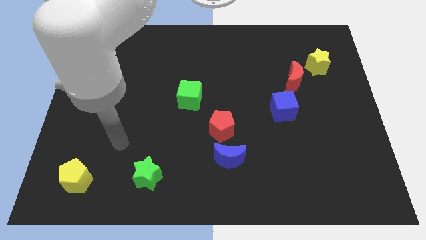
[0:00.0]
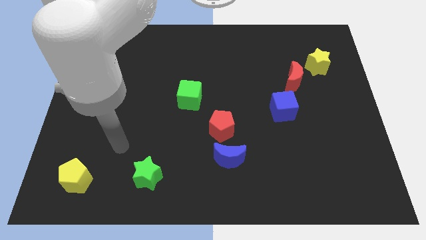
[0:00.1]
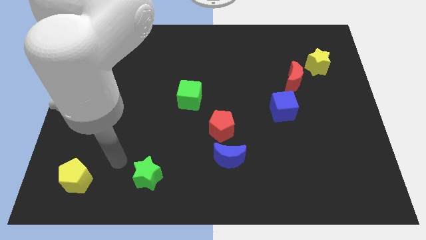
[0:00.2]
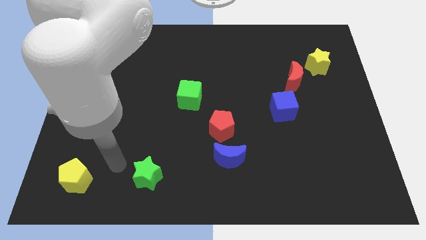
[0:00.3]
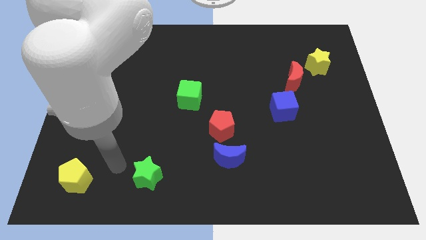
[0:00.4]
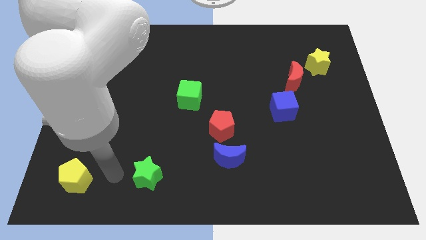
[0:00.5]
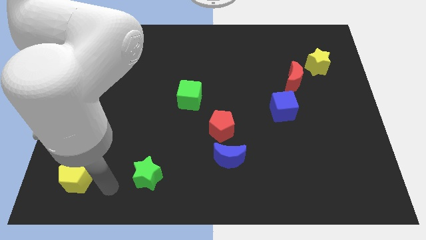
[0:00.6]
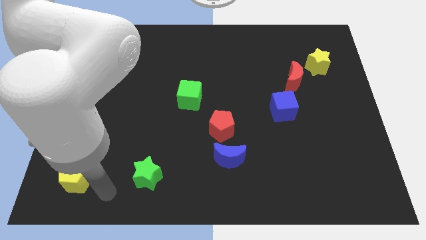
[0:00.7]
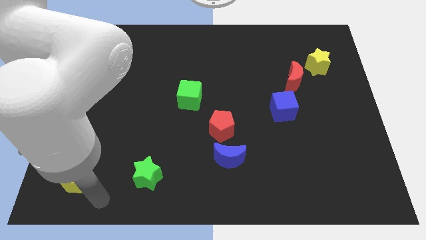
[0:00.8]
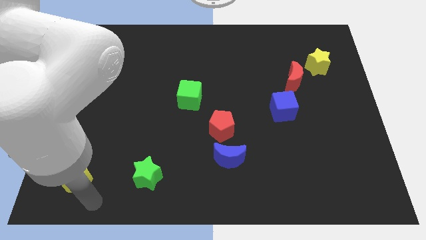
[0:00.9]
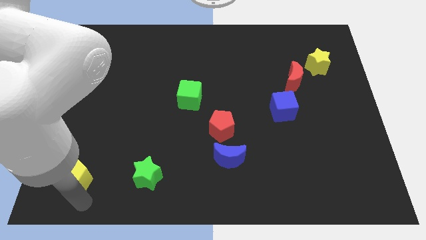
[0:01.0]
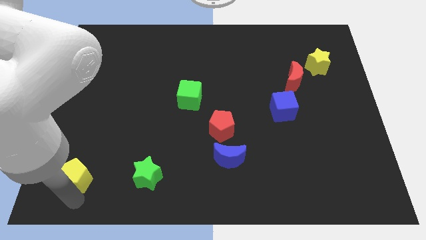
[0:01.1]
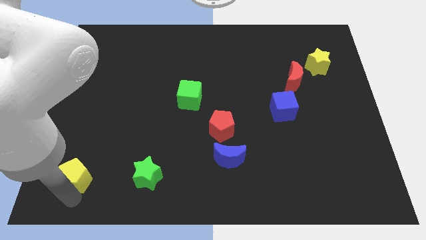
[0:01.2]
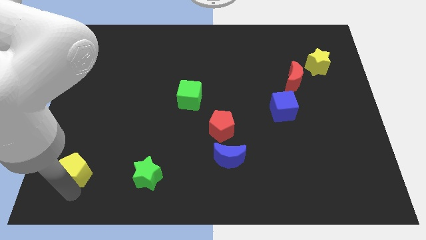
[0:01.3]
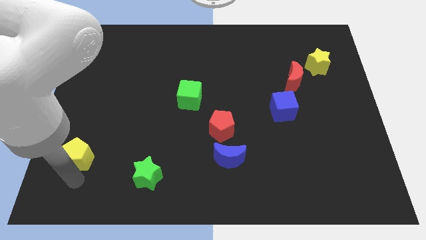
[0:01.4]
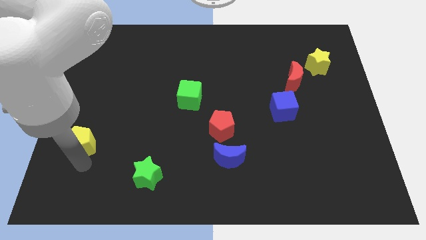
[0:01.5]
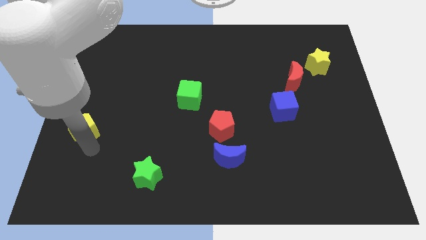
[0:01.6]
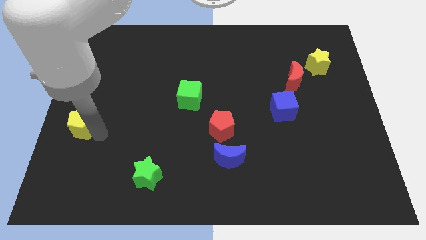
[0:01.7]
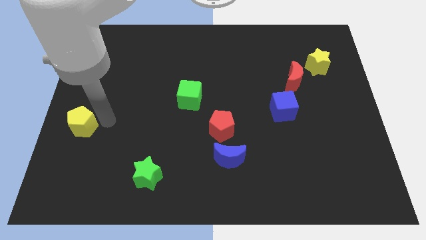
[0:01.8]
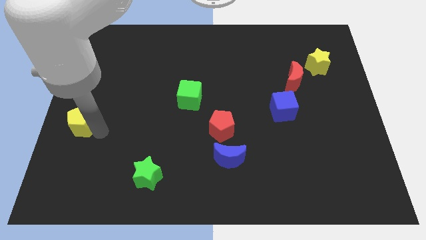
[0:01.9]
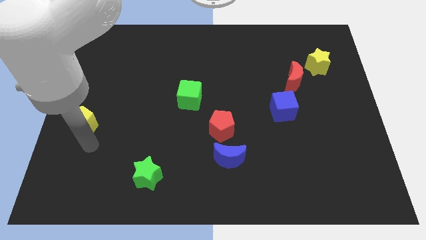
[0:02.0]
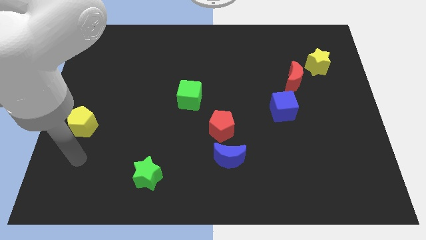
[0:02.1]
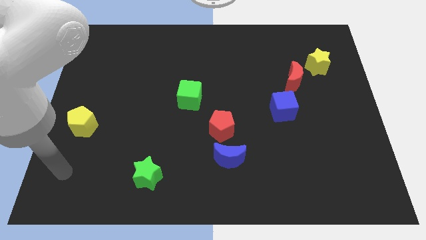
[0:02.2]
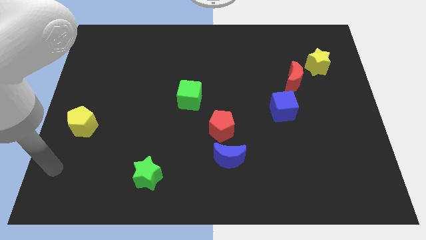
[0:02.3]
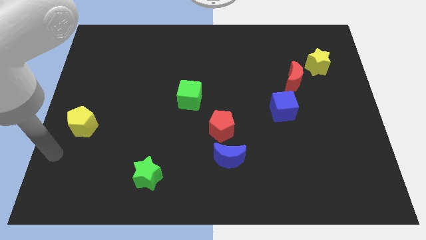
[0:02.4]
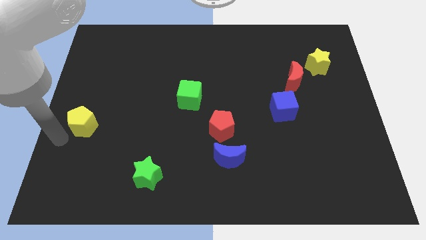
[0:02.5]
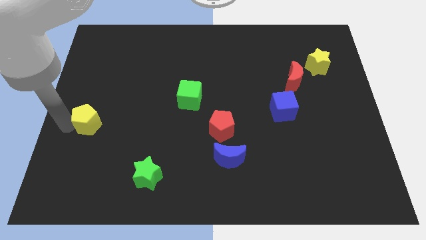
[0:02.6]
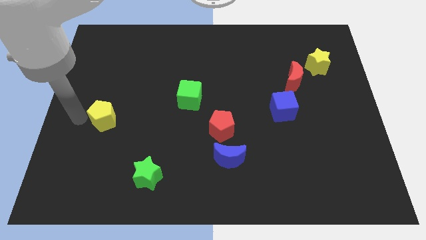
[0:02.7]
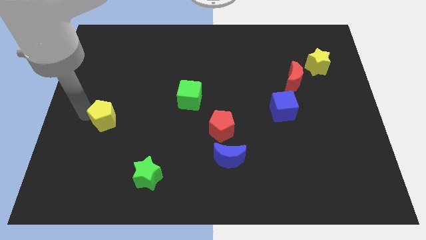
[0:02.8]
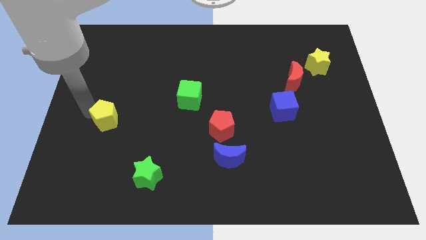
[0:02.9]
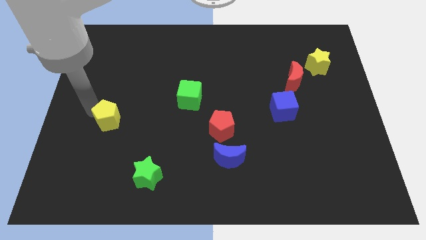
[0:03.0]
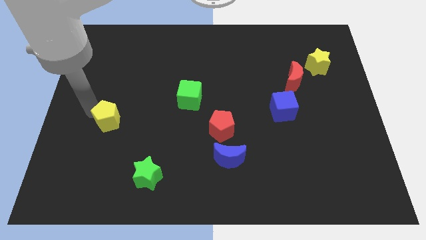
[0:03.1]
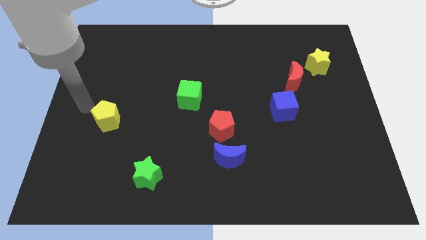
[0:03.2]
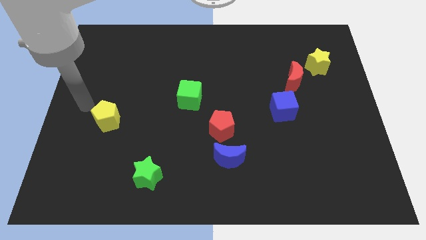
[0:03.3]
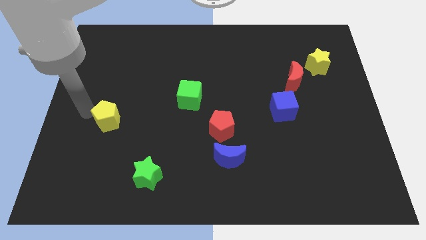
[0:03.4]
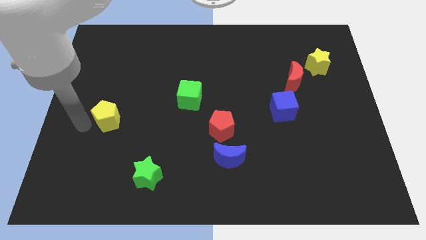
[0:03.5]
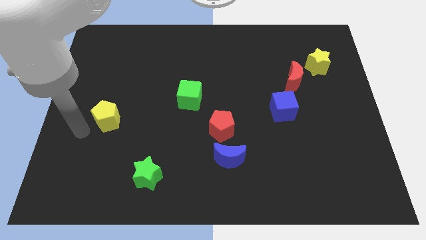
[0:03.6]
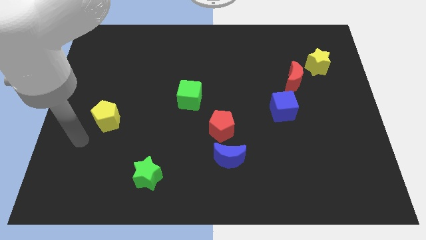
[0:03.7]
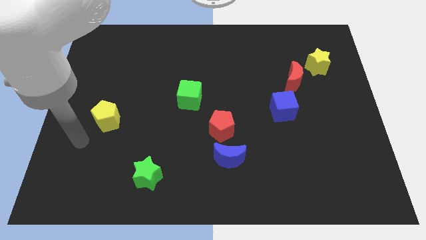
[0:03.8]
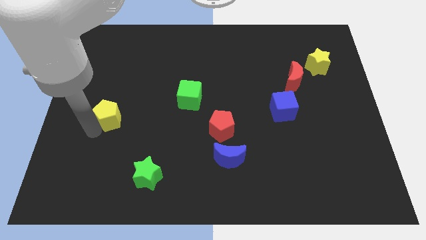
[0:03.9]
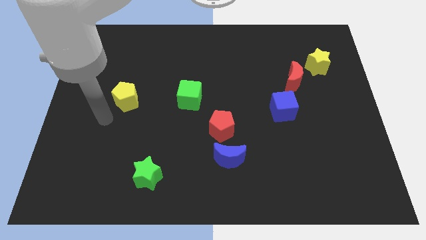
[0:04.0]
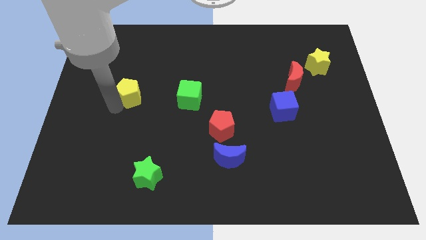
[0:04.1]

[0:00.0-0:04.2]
place the yellow pentagon horizontally to the left side of the green cube

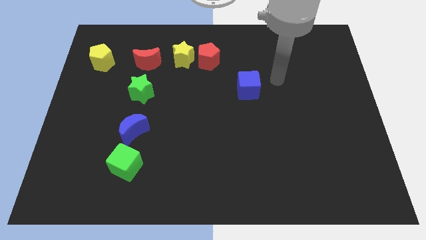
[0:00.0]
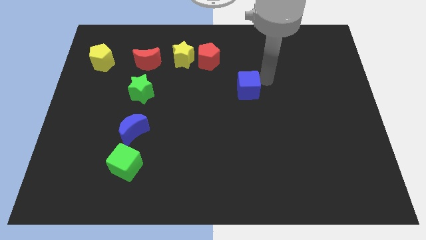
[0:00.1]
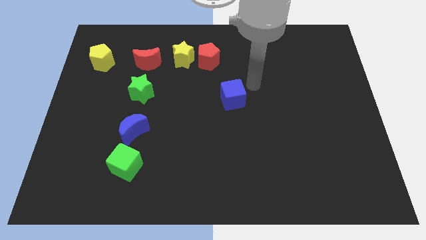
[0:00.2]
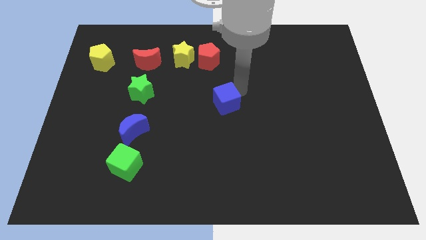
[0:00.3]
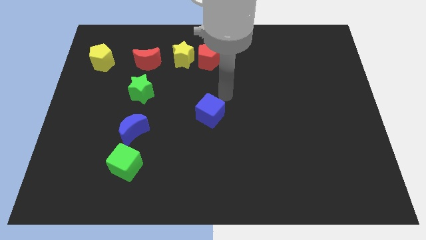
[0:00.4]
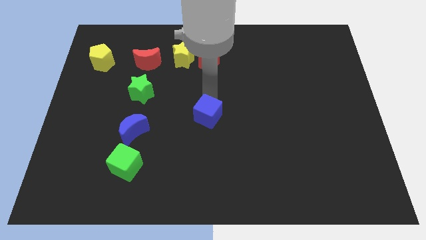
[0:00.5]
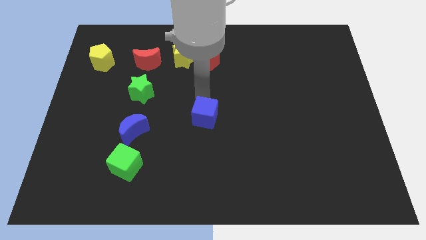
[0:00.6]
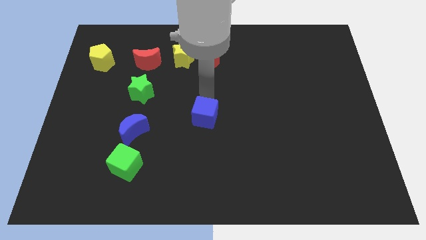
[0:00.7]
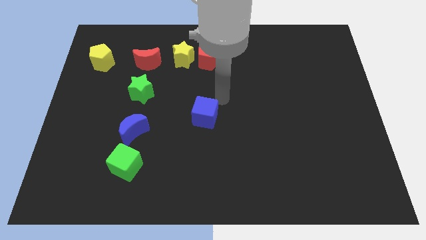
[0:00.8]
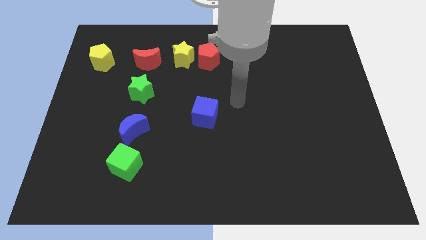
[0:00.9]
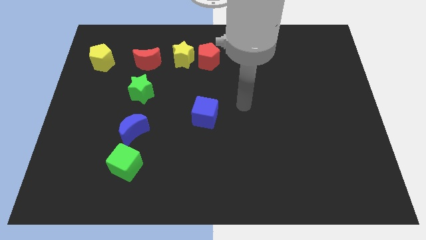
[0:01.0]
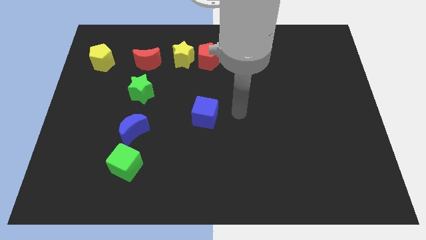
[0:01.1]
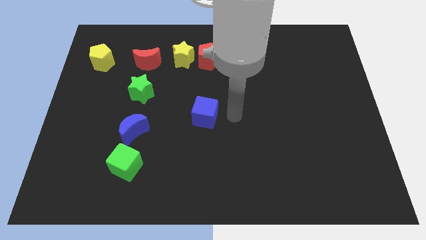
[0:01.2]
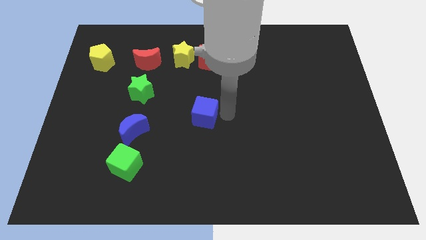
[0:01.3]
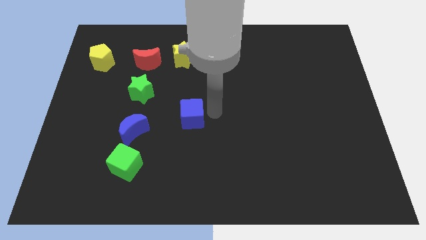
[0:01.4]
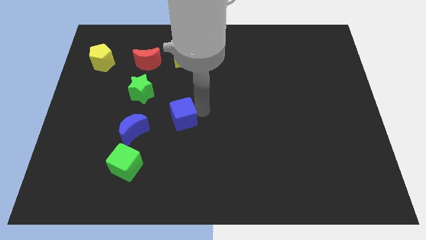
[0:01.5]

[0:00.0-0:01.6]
drag blue cube towards left side of the board

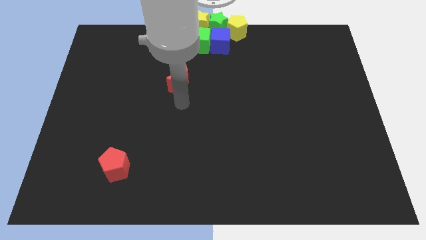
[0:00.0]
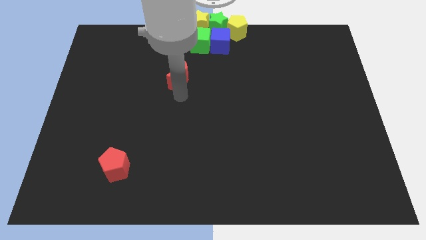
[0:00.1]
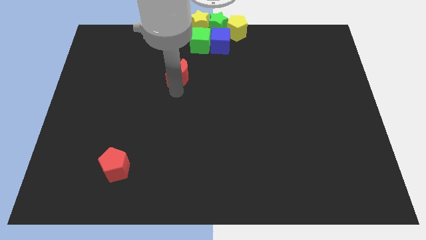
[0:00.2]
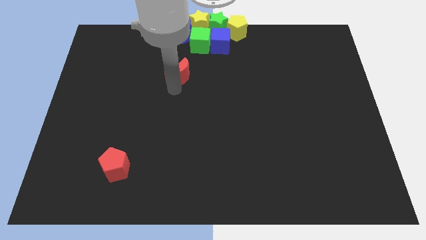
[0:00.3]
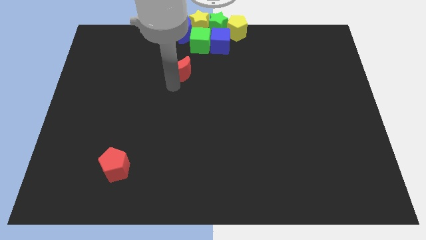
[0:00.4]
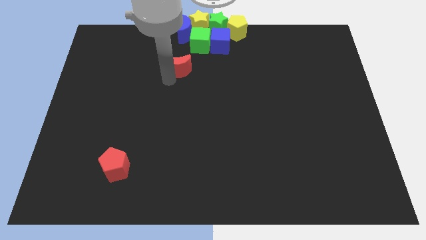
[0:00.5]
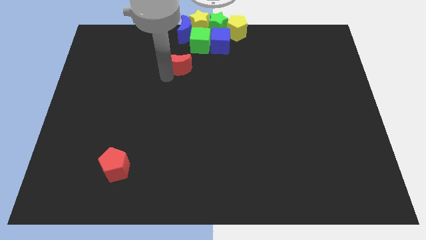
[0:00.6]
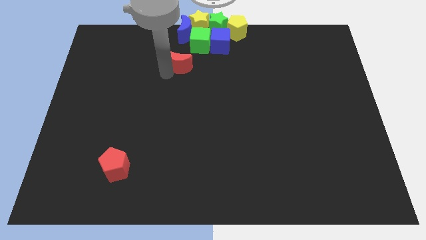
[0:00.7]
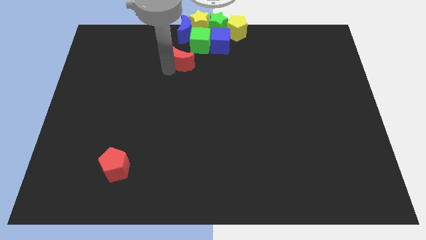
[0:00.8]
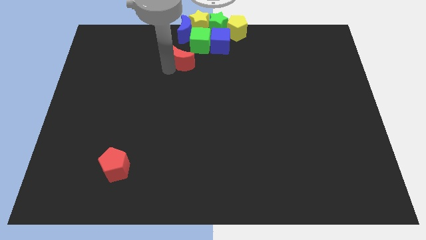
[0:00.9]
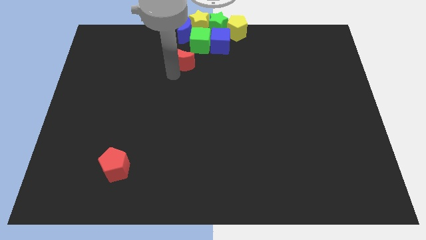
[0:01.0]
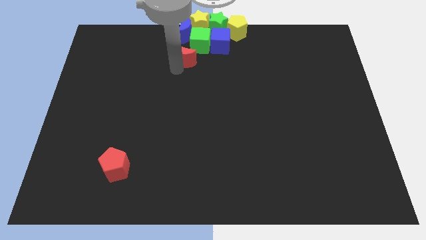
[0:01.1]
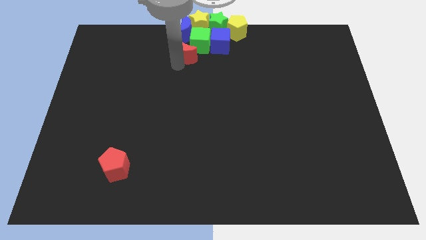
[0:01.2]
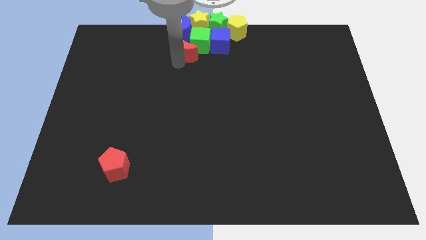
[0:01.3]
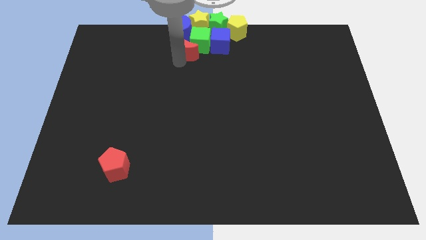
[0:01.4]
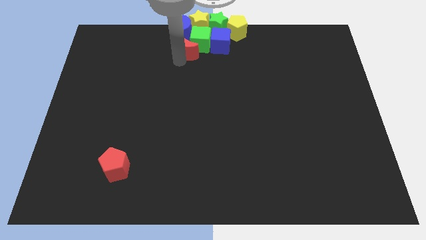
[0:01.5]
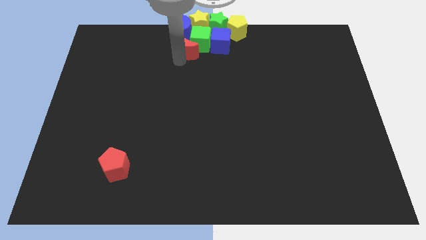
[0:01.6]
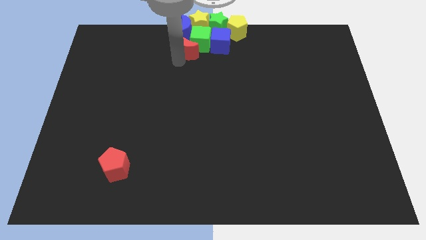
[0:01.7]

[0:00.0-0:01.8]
place the red moon below the green cube

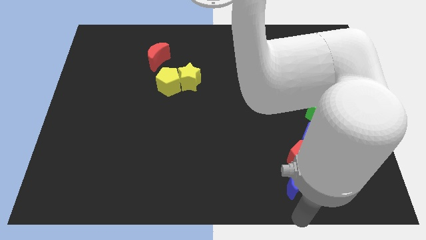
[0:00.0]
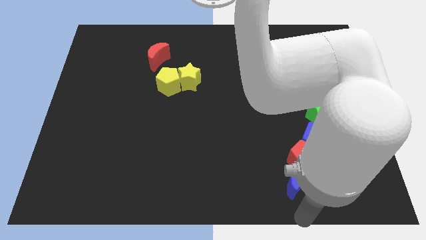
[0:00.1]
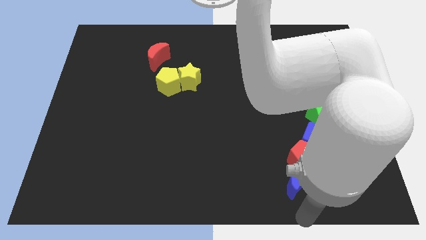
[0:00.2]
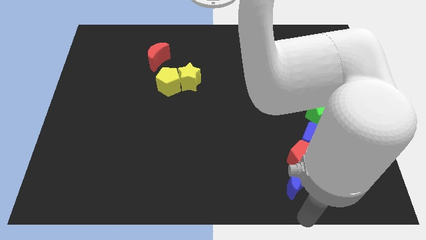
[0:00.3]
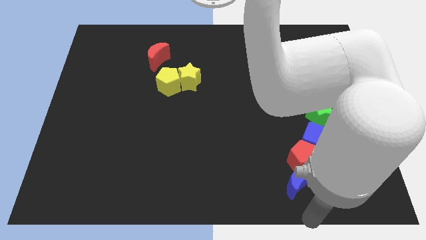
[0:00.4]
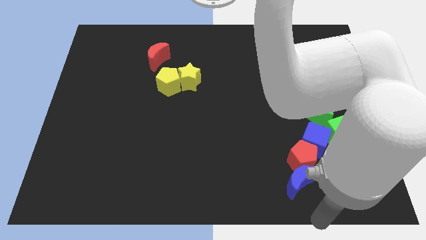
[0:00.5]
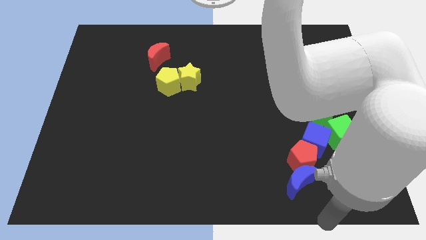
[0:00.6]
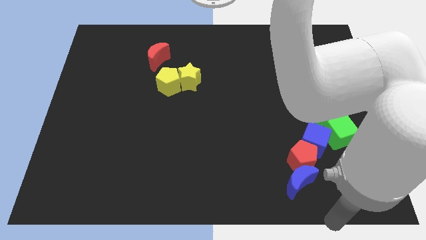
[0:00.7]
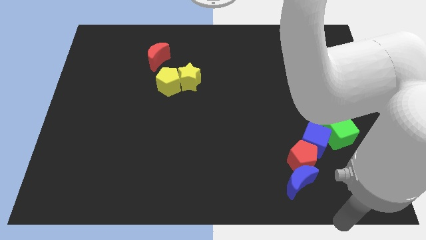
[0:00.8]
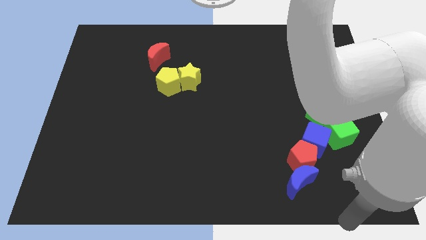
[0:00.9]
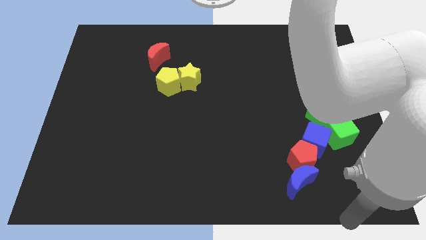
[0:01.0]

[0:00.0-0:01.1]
move your arm towards the bottom right corner of the board

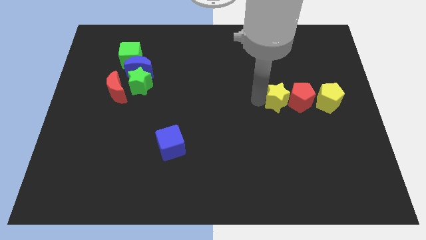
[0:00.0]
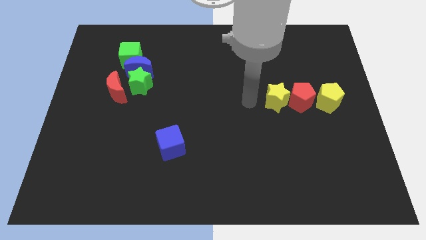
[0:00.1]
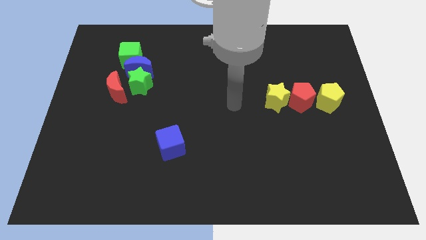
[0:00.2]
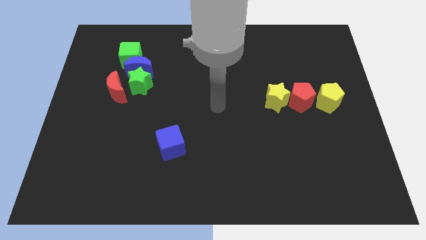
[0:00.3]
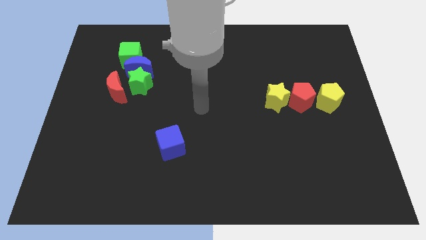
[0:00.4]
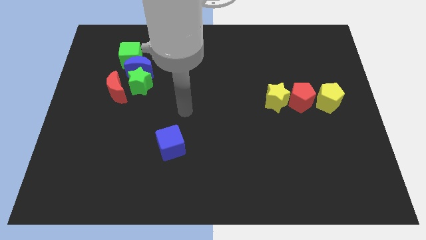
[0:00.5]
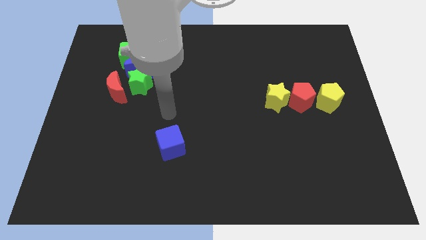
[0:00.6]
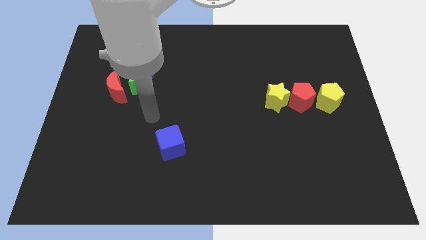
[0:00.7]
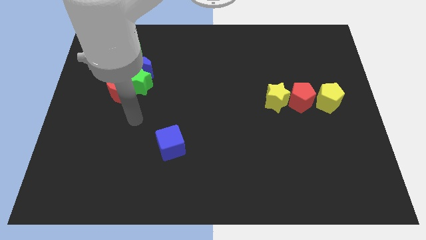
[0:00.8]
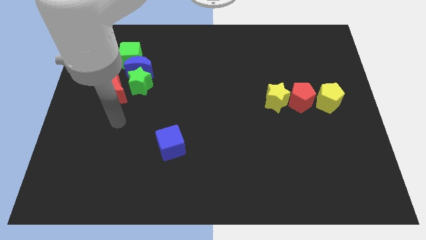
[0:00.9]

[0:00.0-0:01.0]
go away from the yellow star
